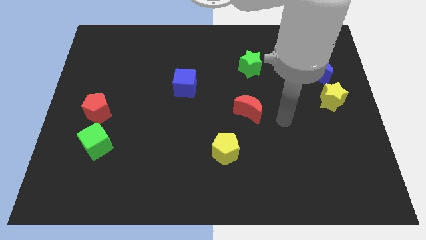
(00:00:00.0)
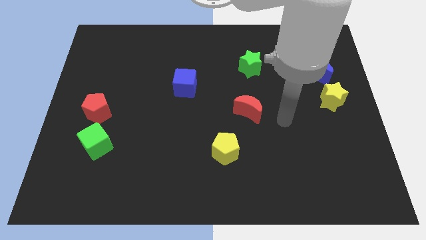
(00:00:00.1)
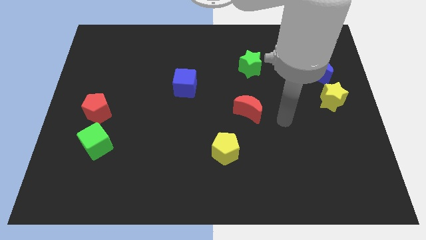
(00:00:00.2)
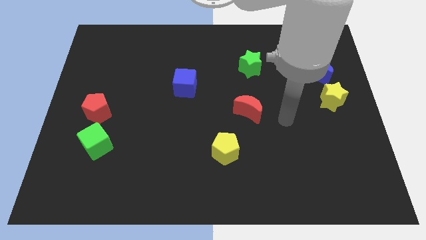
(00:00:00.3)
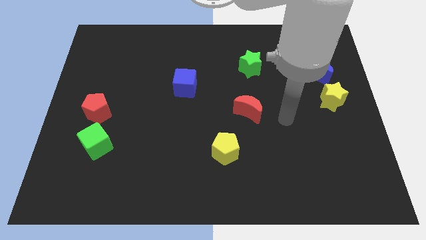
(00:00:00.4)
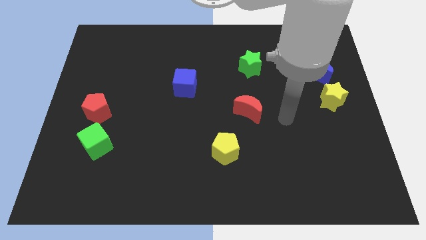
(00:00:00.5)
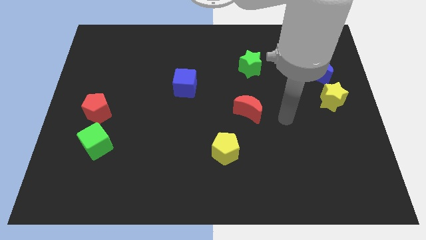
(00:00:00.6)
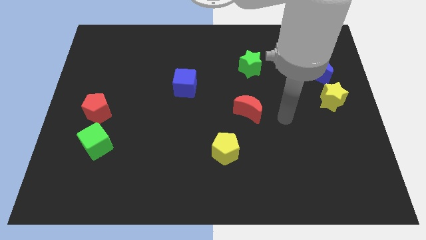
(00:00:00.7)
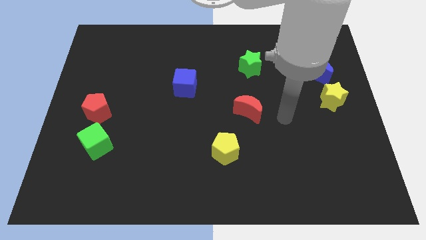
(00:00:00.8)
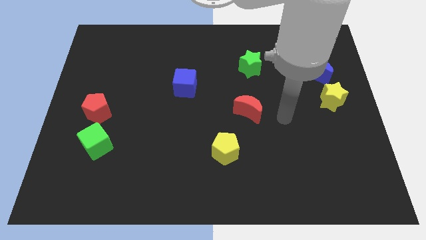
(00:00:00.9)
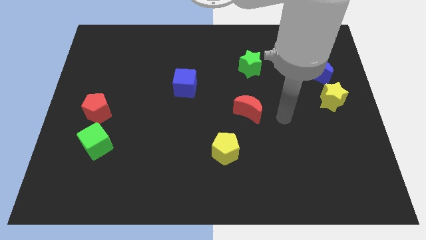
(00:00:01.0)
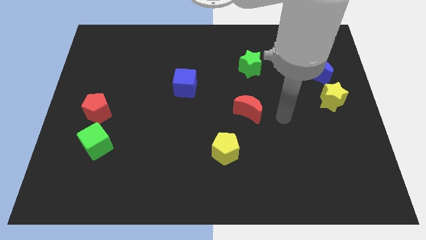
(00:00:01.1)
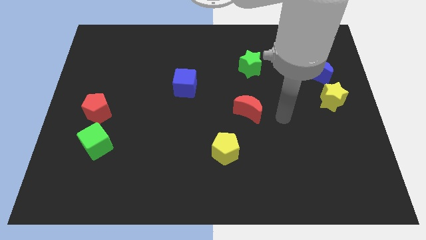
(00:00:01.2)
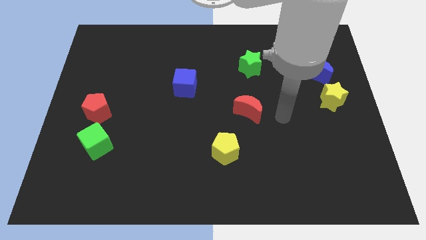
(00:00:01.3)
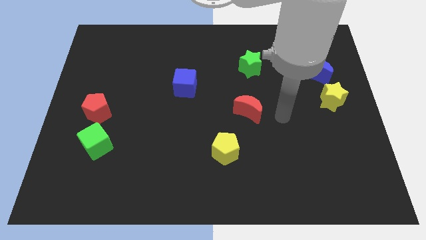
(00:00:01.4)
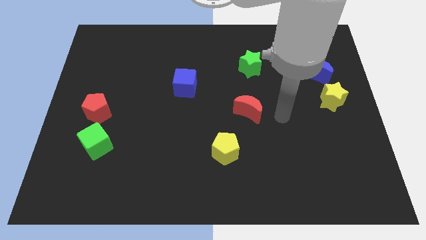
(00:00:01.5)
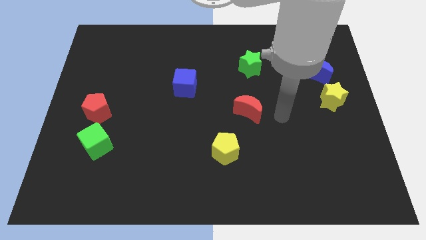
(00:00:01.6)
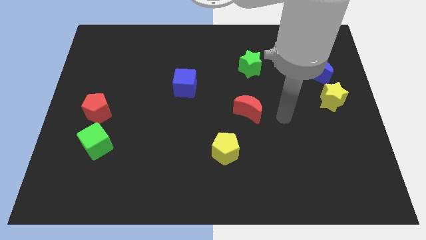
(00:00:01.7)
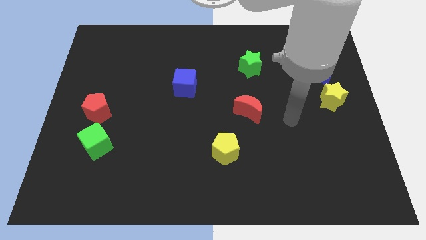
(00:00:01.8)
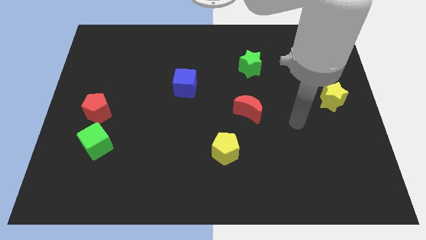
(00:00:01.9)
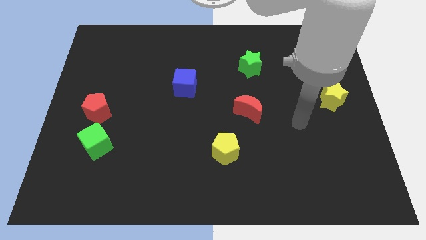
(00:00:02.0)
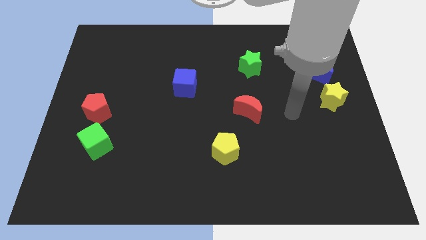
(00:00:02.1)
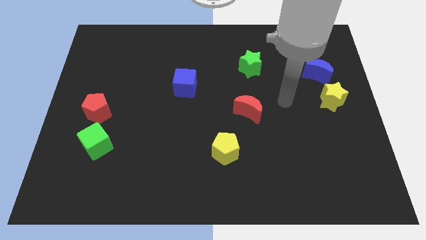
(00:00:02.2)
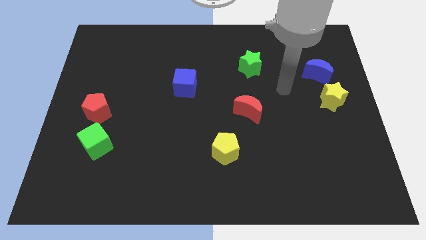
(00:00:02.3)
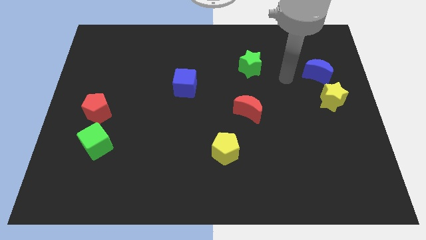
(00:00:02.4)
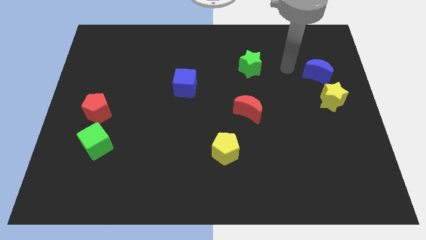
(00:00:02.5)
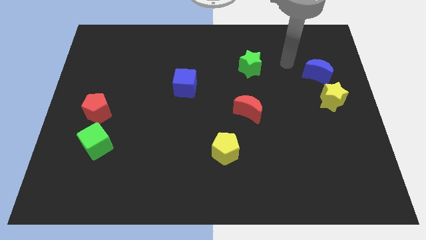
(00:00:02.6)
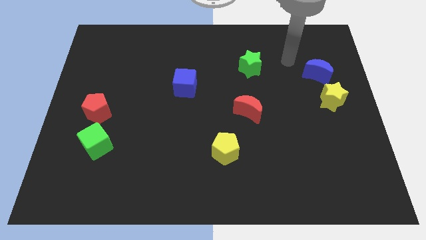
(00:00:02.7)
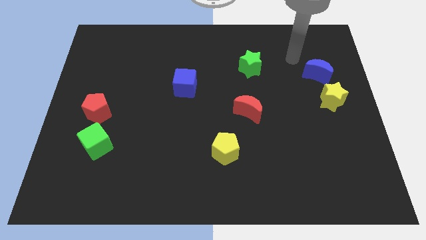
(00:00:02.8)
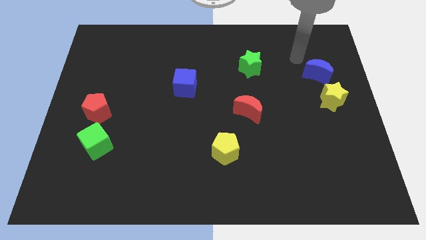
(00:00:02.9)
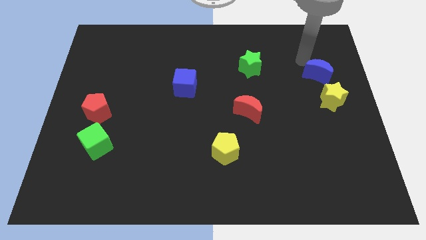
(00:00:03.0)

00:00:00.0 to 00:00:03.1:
move your arm to the top of blue crescent

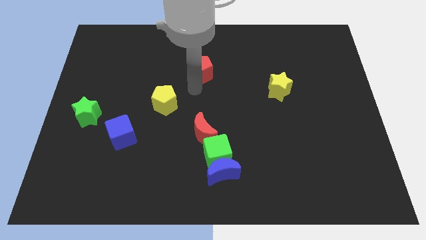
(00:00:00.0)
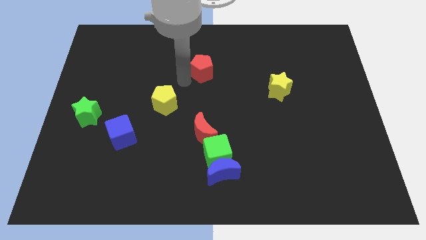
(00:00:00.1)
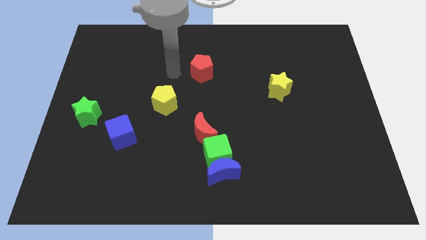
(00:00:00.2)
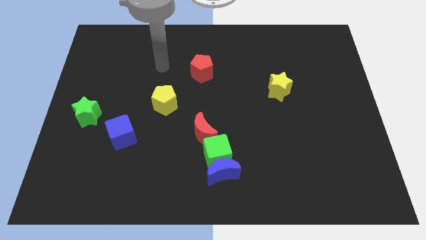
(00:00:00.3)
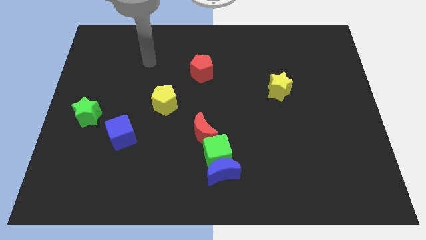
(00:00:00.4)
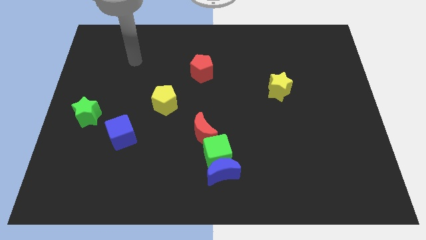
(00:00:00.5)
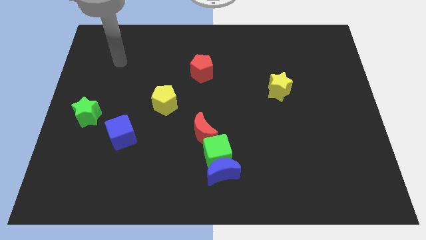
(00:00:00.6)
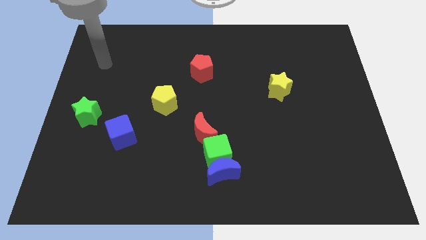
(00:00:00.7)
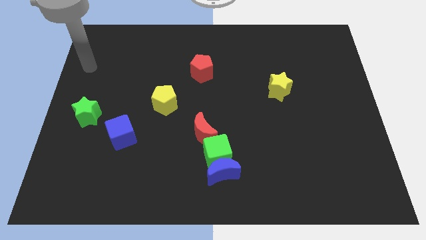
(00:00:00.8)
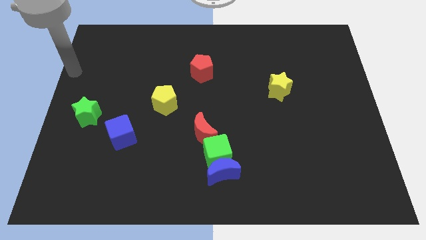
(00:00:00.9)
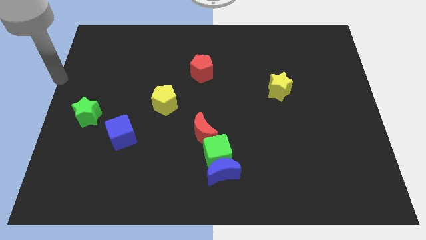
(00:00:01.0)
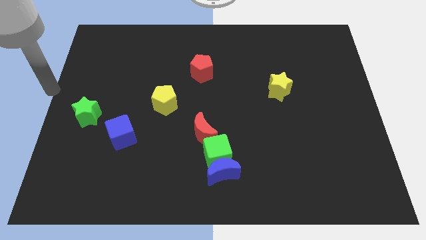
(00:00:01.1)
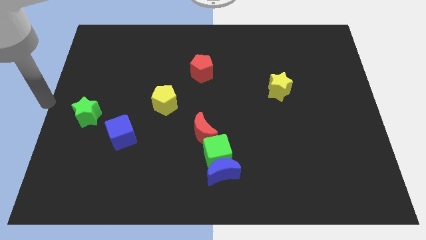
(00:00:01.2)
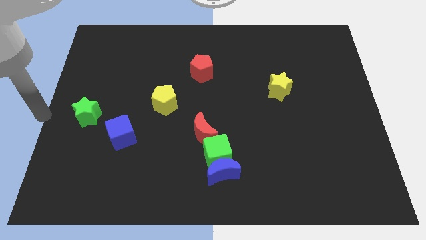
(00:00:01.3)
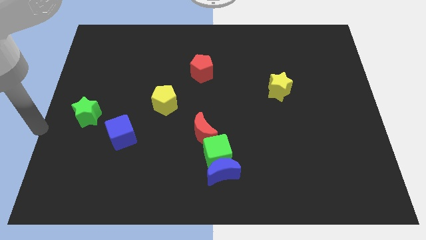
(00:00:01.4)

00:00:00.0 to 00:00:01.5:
go and place your hand at the left side of the green star

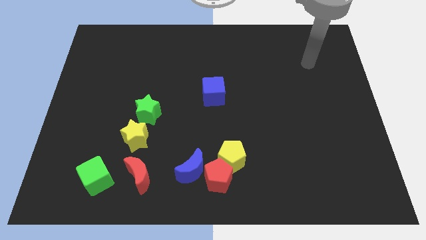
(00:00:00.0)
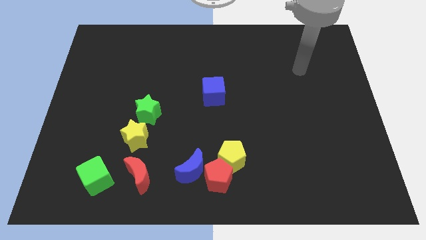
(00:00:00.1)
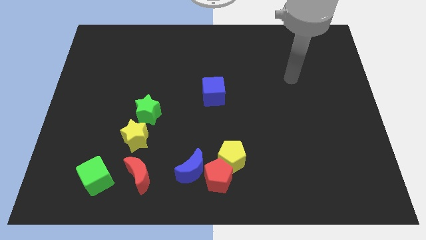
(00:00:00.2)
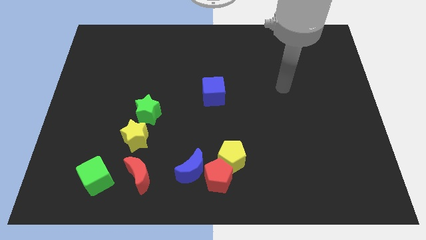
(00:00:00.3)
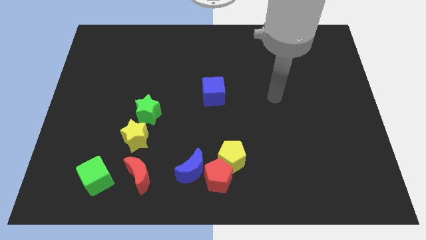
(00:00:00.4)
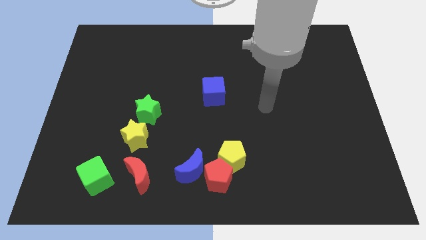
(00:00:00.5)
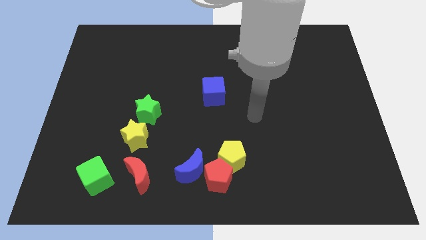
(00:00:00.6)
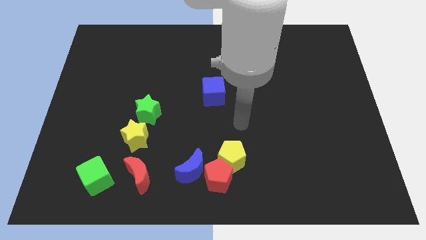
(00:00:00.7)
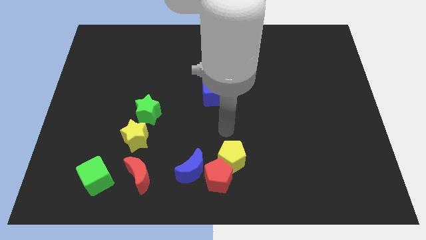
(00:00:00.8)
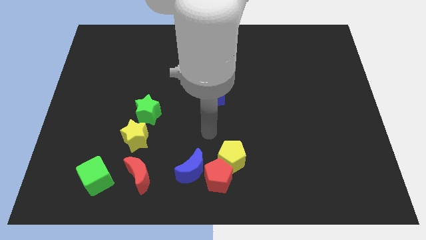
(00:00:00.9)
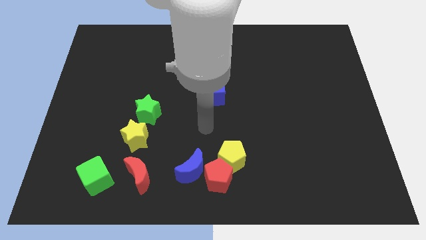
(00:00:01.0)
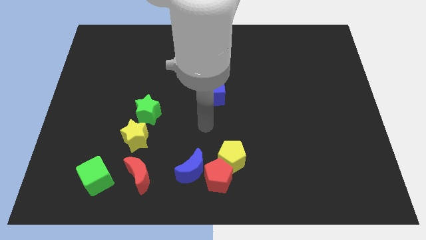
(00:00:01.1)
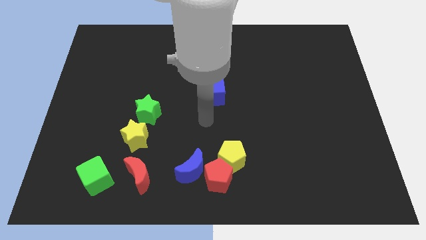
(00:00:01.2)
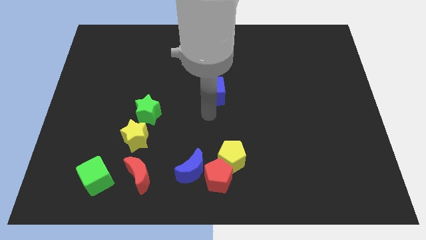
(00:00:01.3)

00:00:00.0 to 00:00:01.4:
point the arm below the blue cube

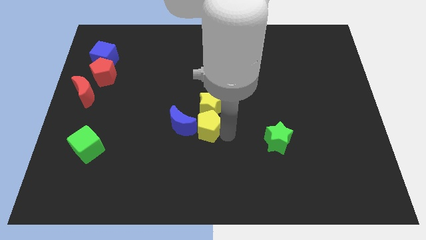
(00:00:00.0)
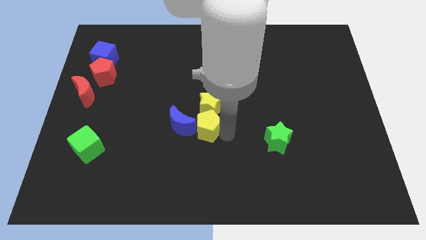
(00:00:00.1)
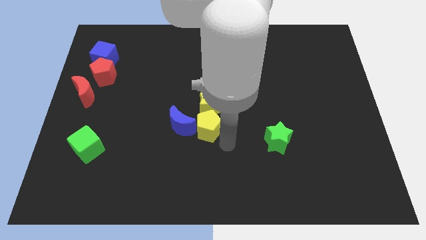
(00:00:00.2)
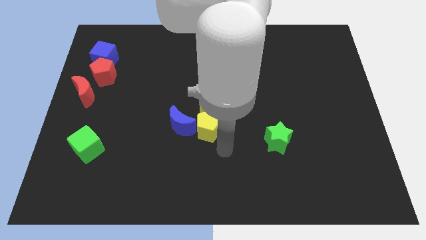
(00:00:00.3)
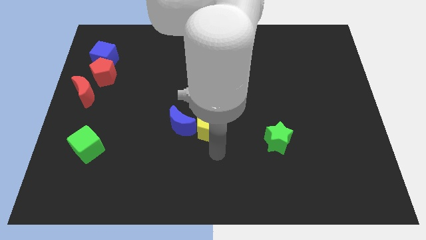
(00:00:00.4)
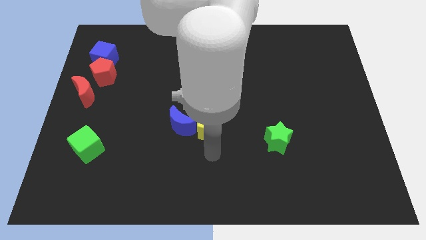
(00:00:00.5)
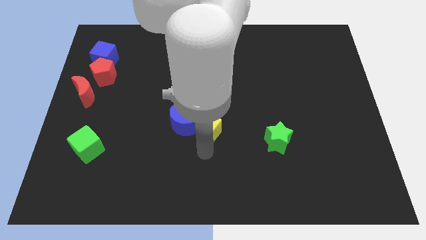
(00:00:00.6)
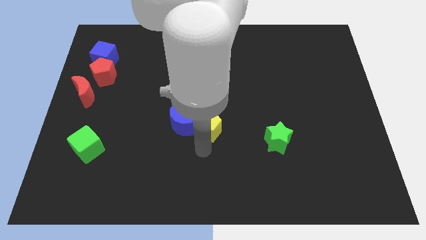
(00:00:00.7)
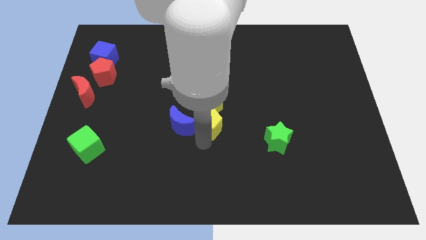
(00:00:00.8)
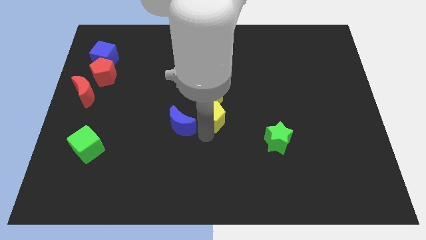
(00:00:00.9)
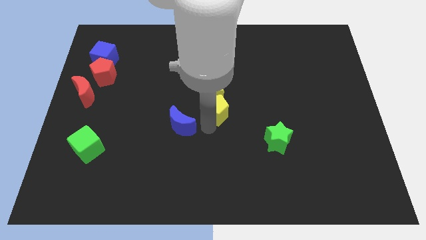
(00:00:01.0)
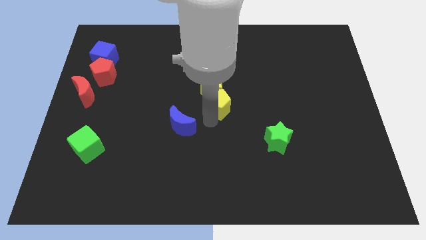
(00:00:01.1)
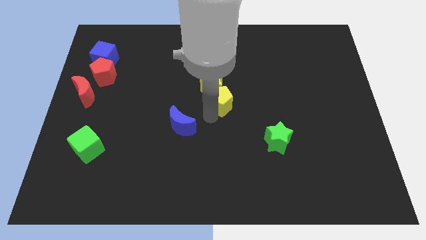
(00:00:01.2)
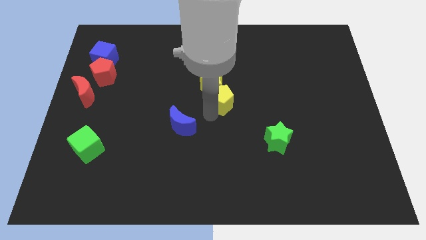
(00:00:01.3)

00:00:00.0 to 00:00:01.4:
slide the yellow objcts upward

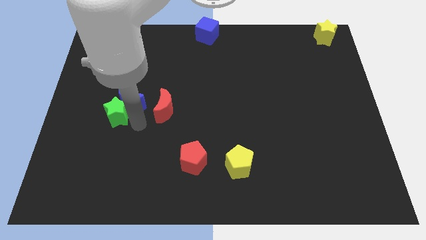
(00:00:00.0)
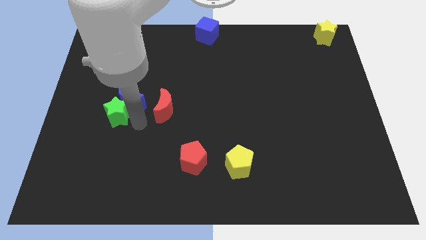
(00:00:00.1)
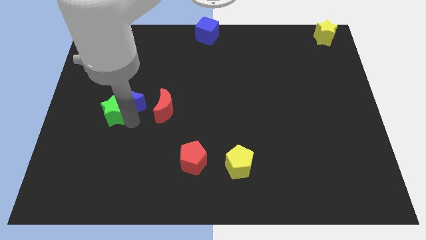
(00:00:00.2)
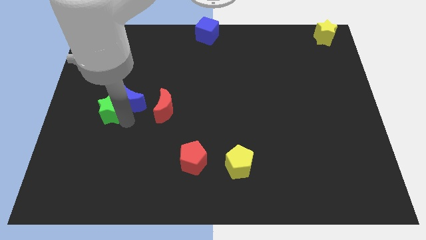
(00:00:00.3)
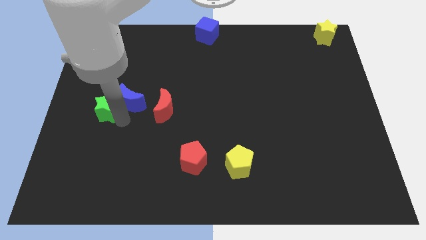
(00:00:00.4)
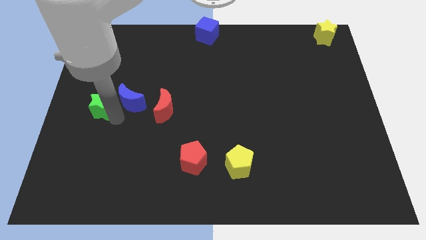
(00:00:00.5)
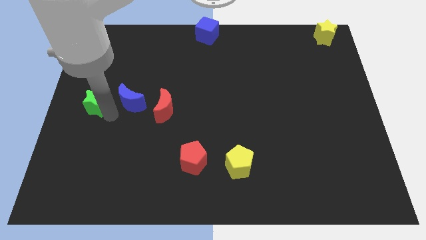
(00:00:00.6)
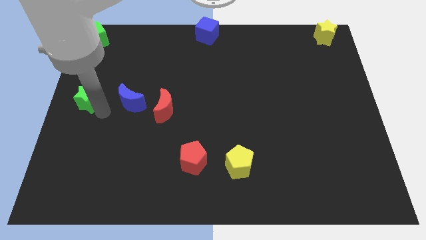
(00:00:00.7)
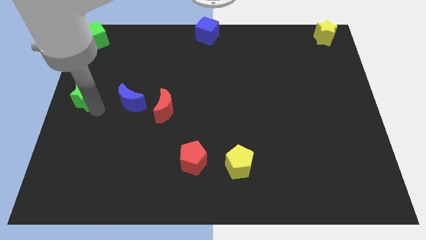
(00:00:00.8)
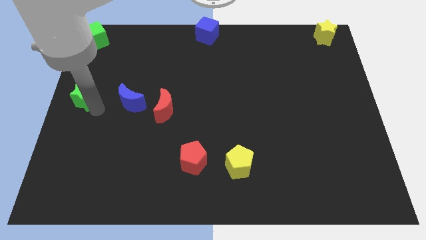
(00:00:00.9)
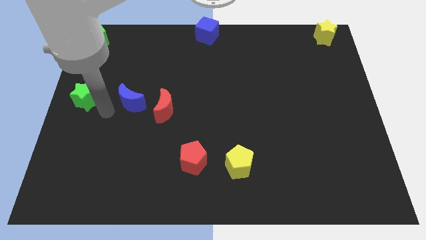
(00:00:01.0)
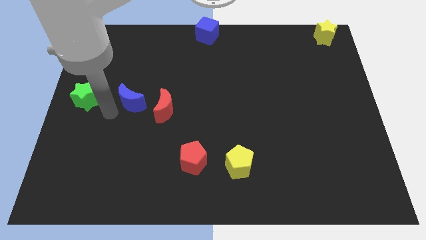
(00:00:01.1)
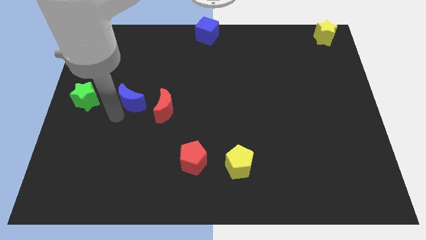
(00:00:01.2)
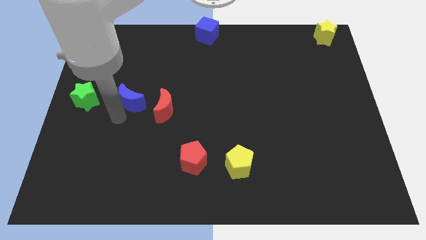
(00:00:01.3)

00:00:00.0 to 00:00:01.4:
place the green star to the left of the blue moon
